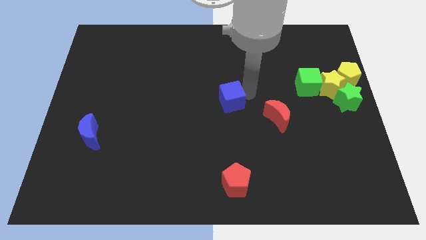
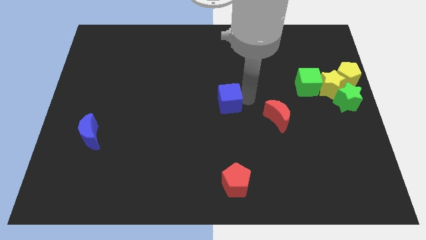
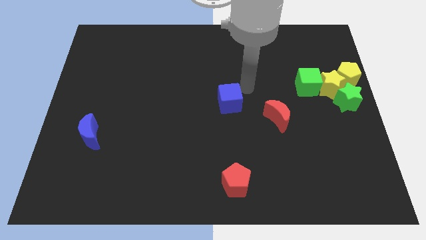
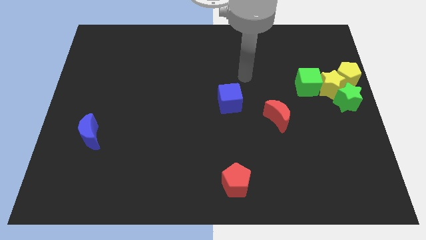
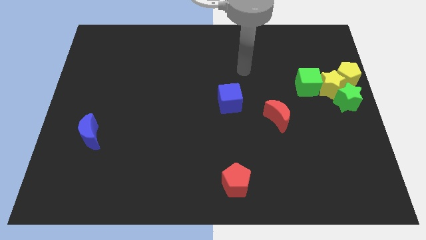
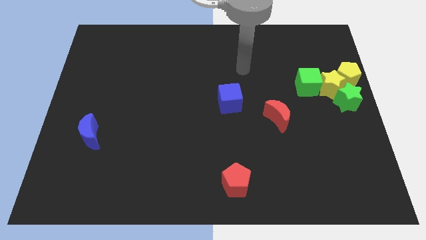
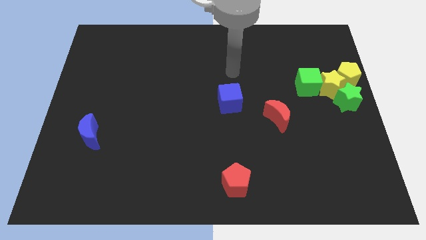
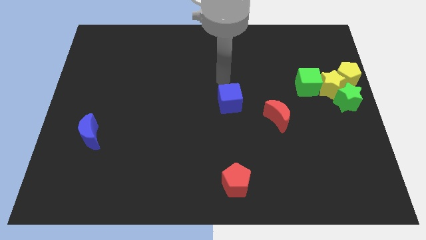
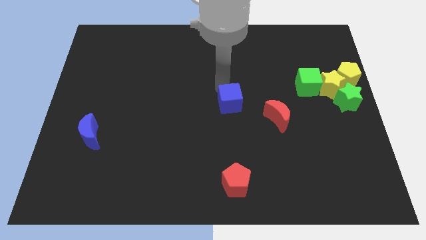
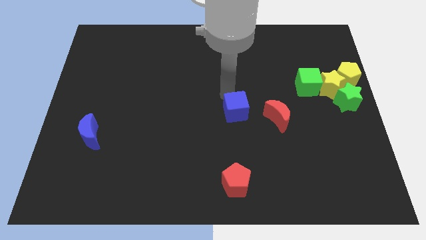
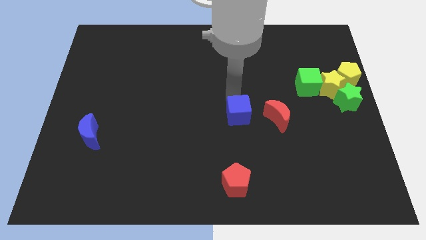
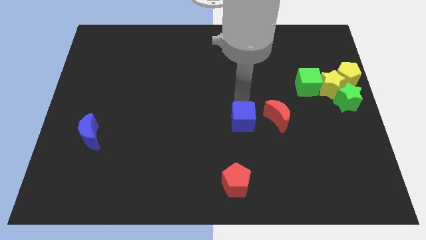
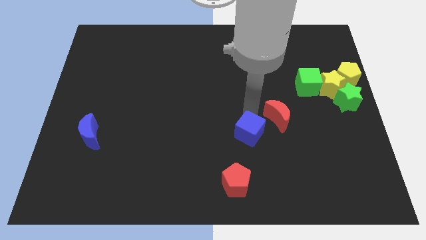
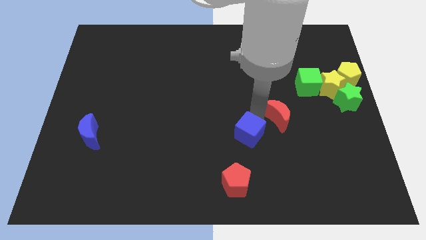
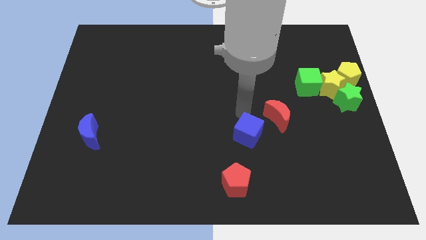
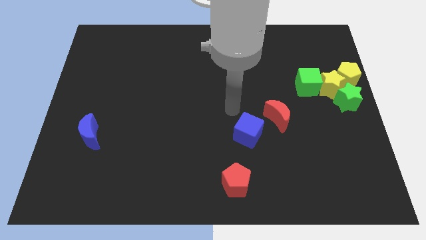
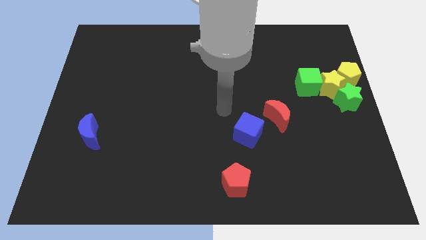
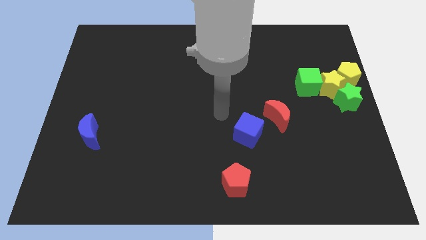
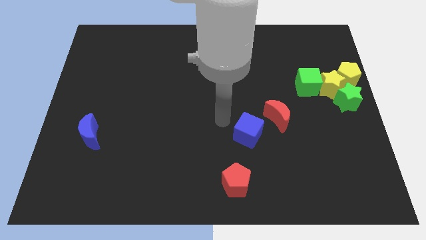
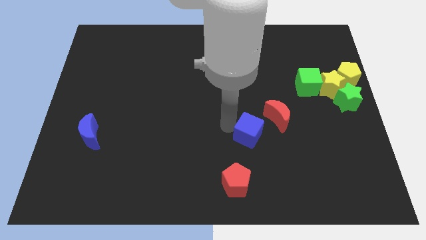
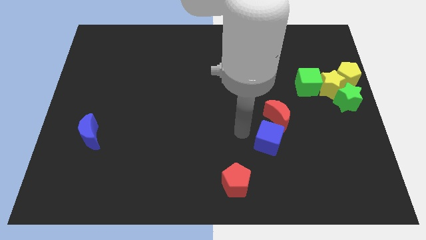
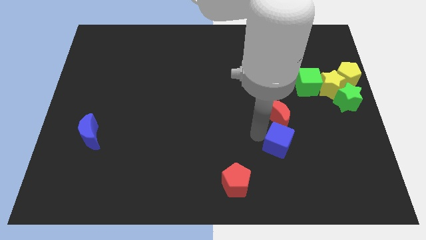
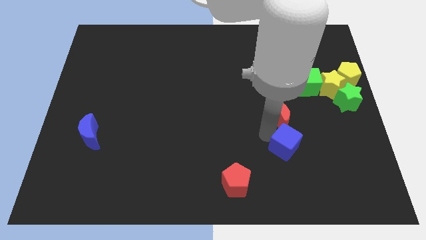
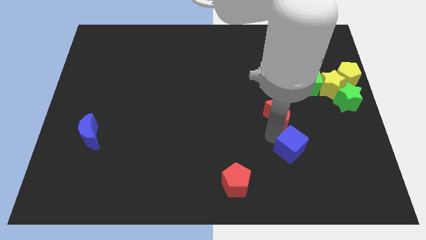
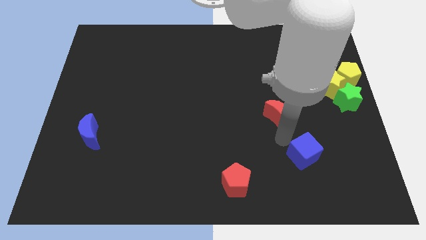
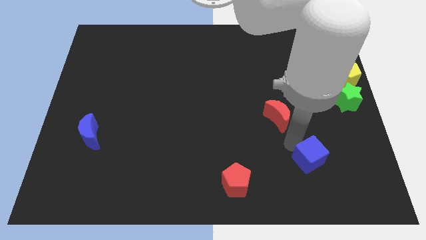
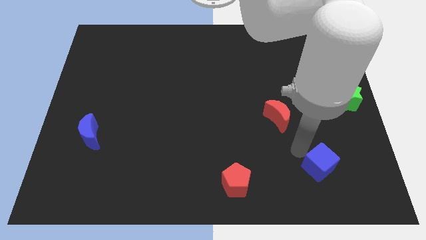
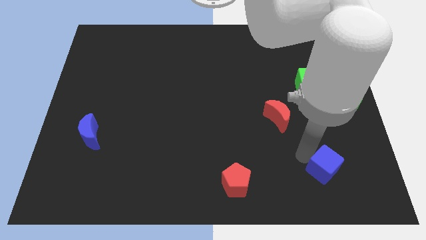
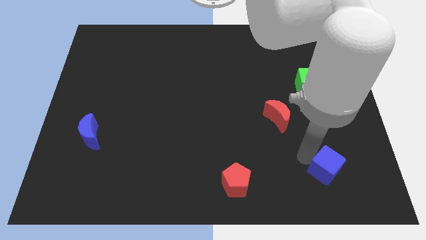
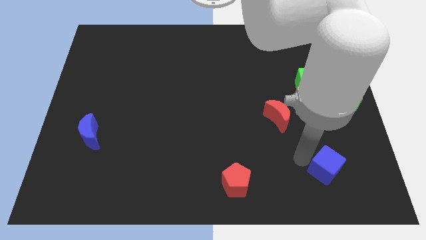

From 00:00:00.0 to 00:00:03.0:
push the blue cube towards bottom right

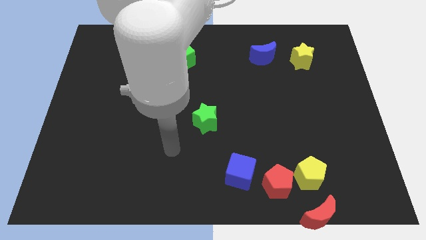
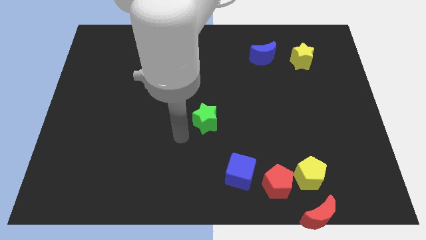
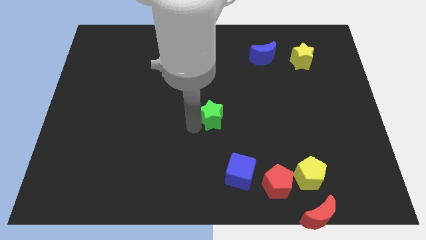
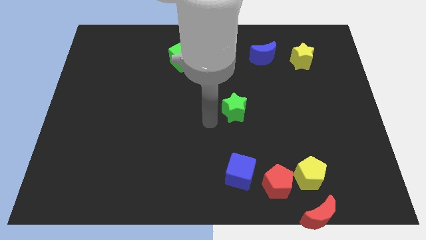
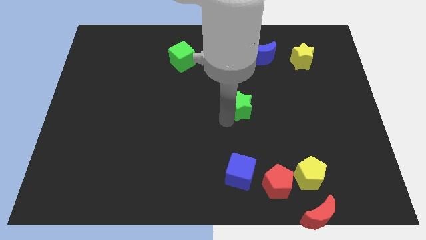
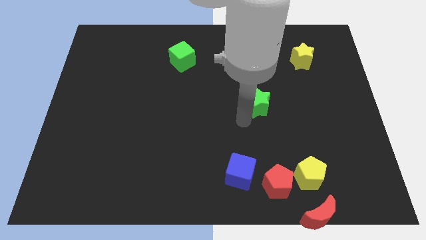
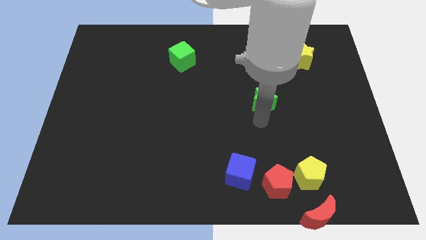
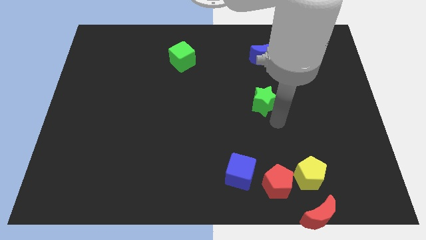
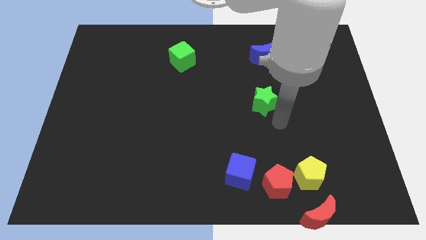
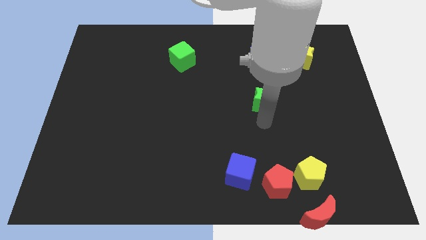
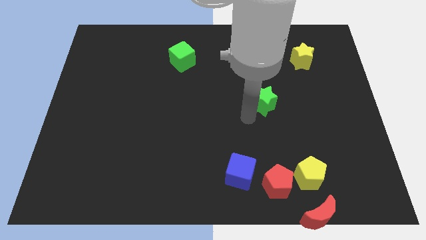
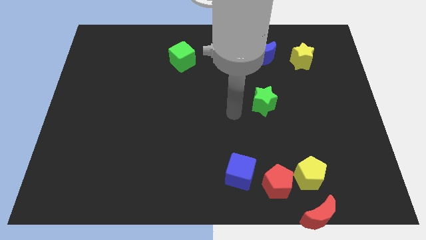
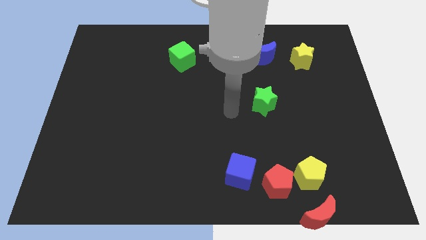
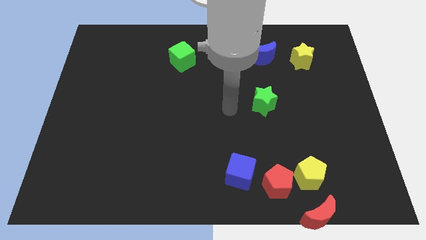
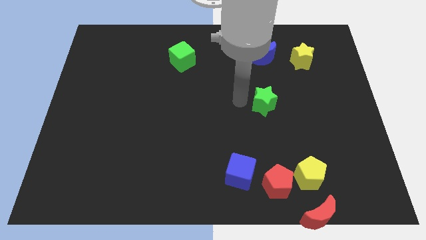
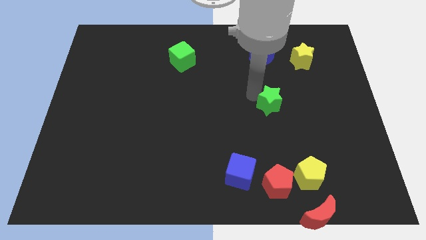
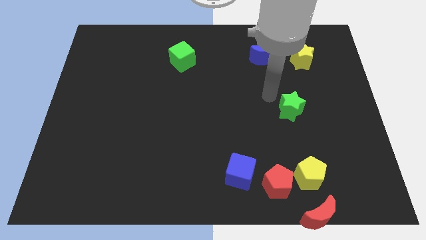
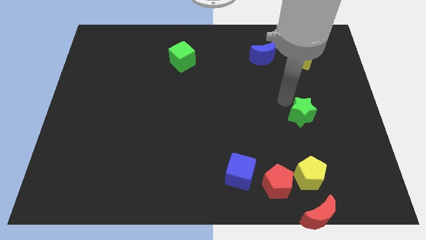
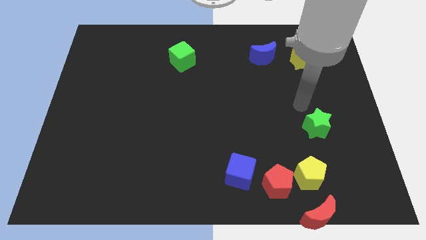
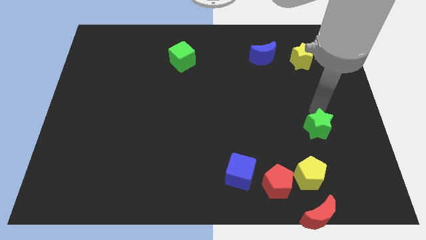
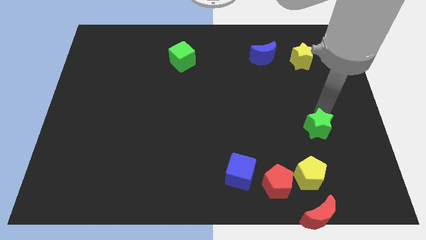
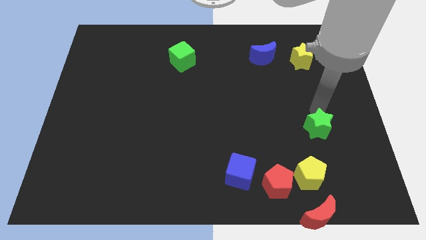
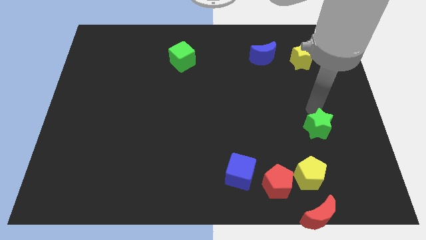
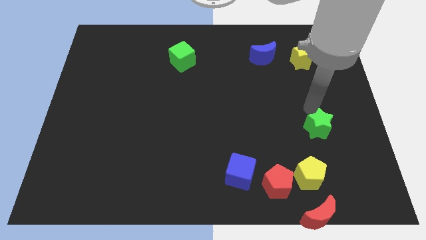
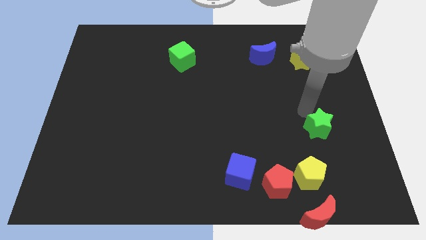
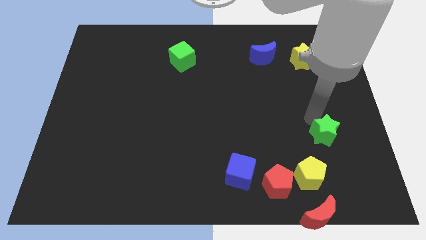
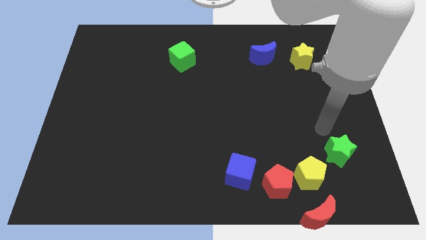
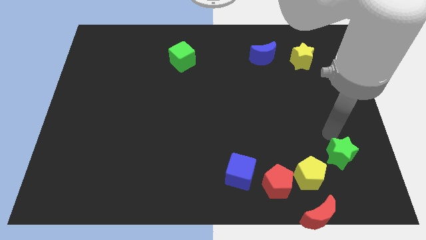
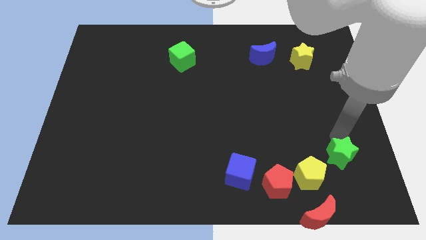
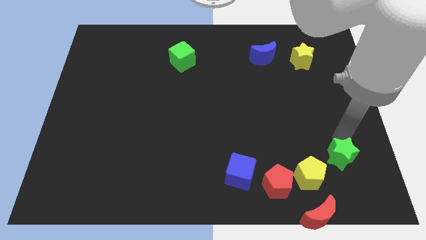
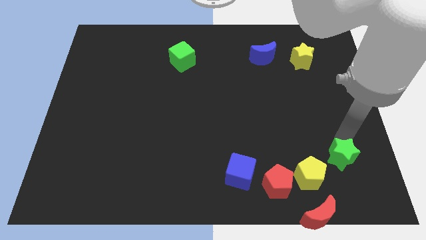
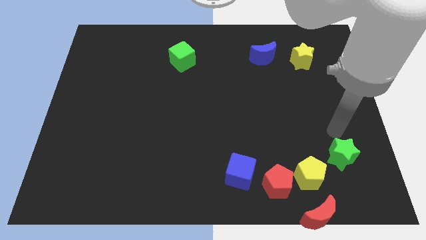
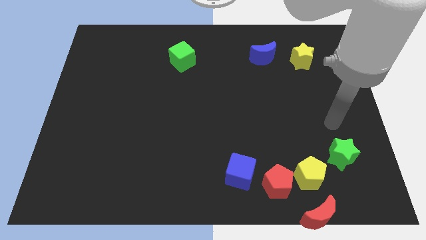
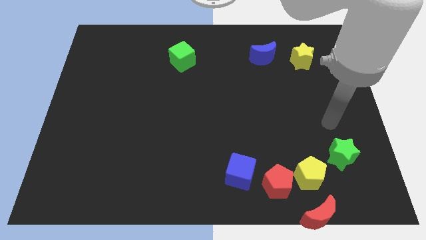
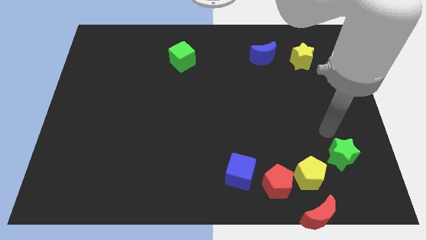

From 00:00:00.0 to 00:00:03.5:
take the green star to the top right side of the yellow pentagon

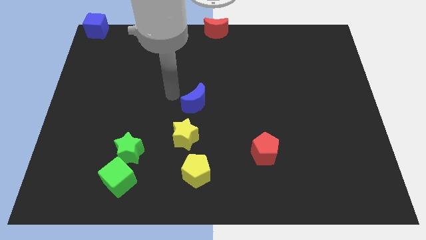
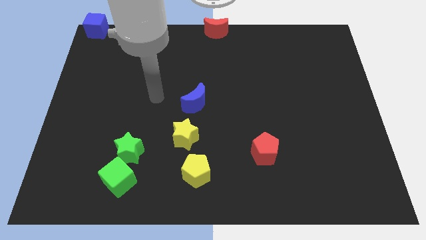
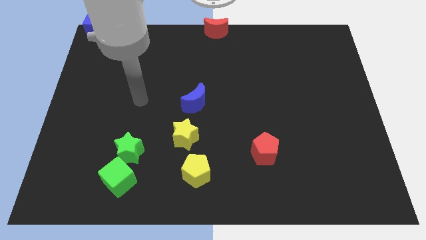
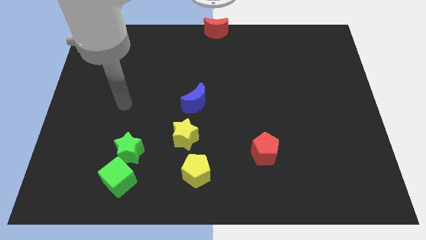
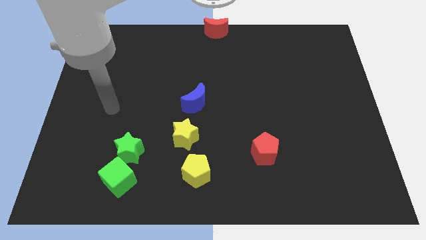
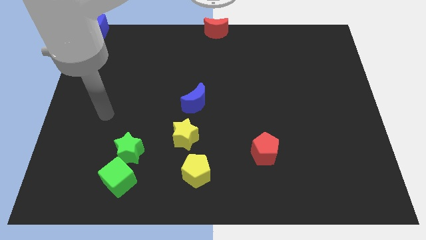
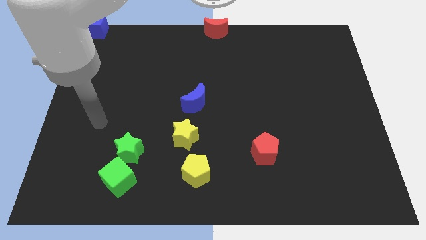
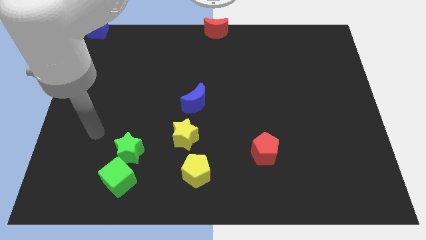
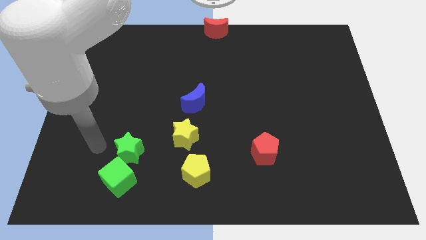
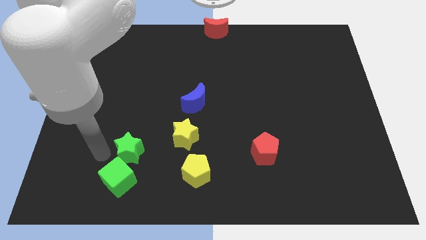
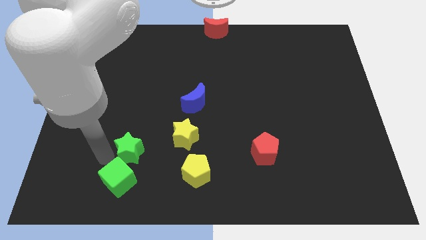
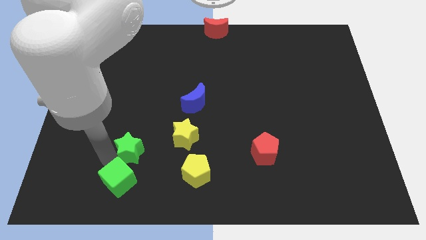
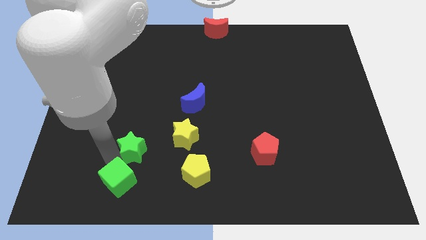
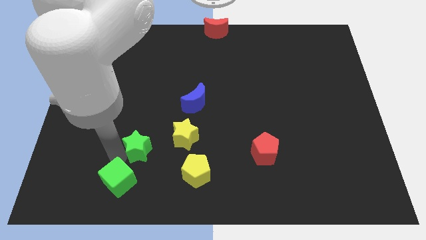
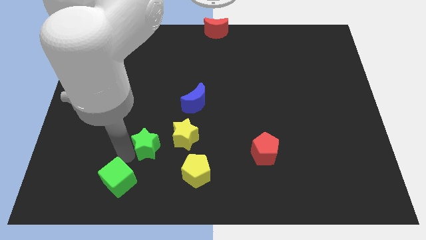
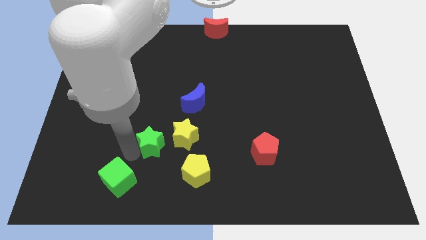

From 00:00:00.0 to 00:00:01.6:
push the green star slightly to the right

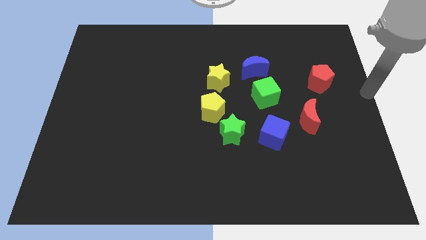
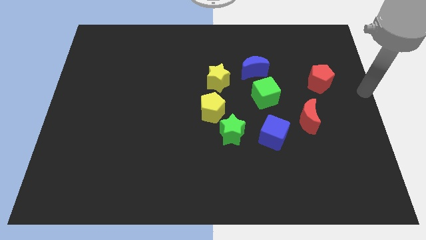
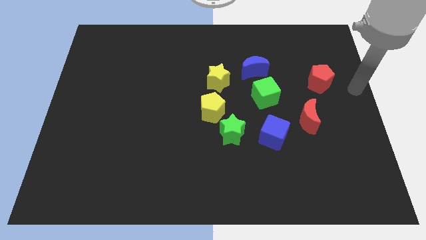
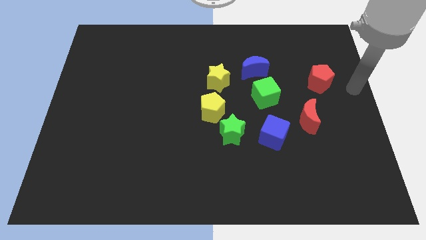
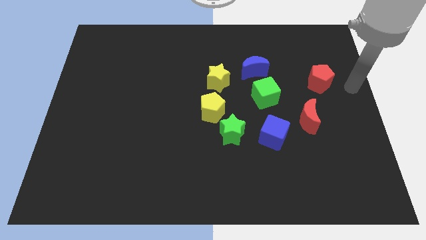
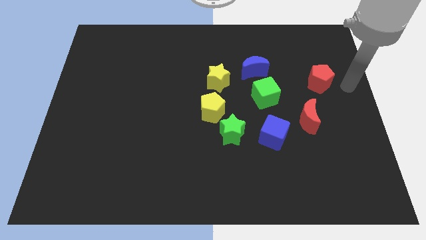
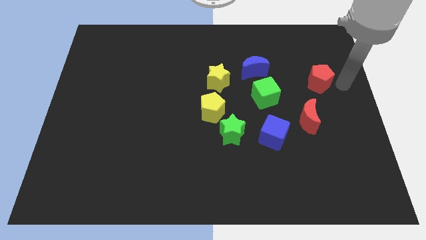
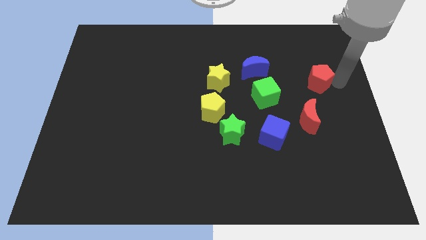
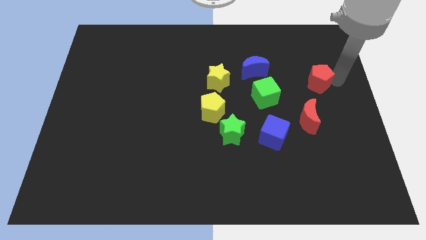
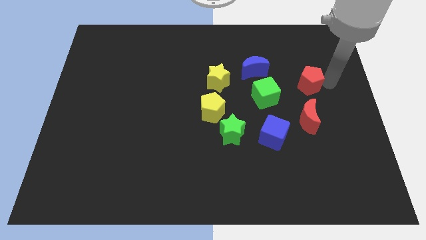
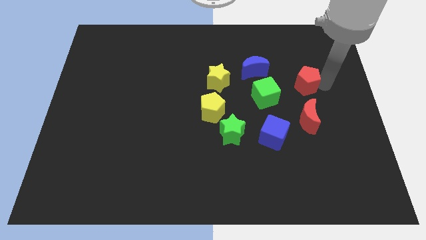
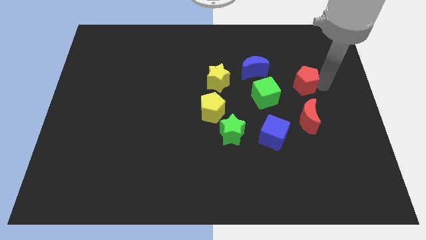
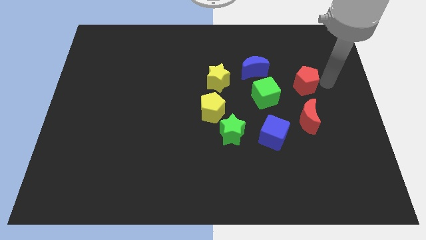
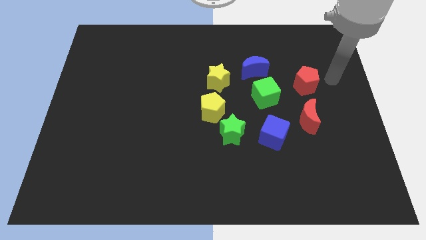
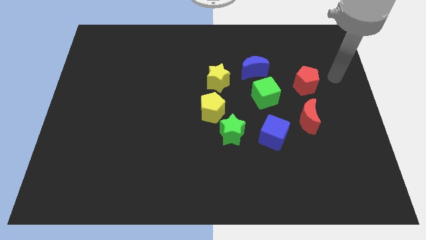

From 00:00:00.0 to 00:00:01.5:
place the red pentagon vertically to the top of the red block
